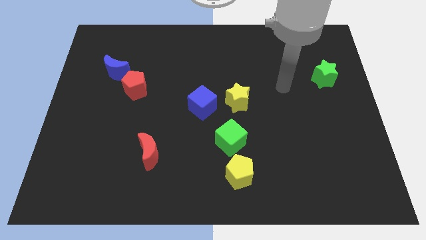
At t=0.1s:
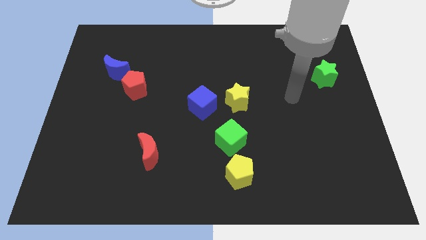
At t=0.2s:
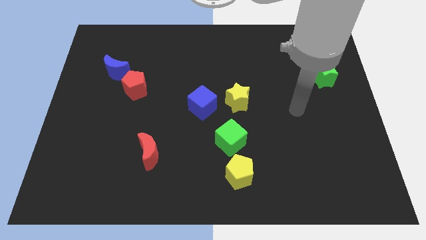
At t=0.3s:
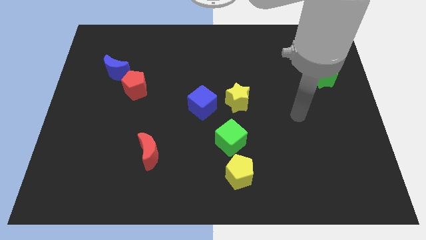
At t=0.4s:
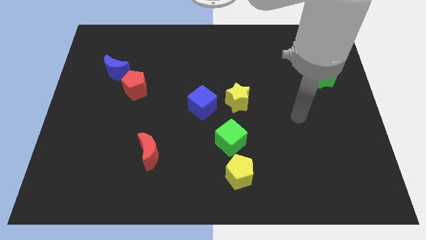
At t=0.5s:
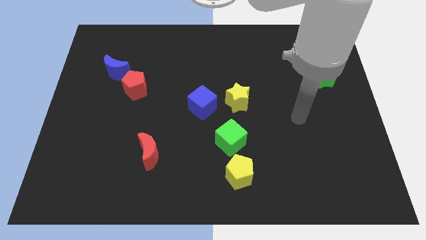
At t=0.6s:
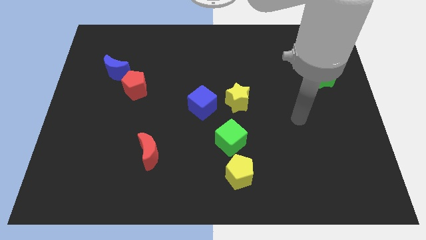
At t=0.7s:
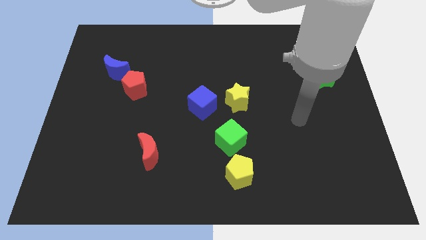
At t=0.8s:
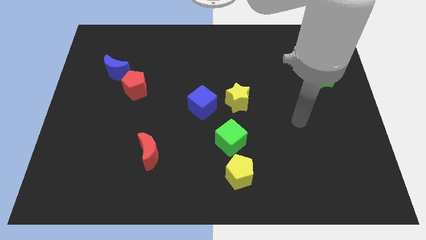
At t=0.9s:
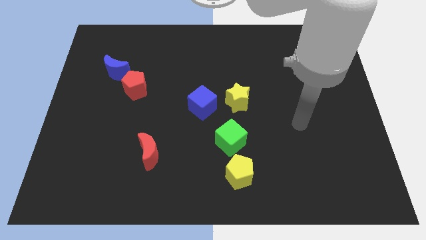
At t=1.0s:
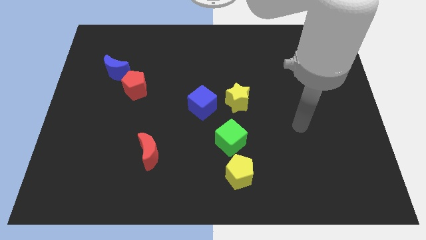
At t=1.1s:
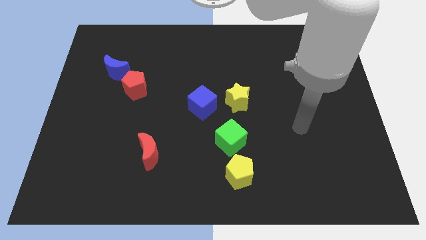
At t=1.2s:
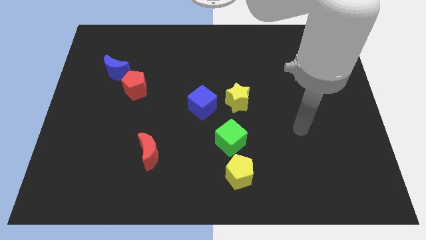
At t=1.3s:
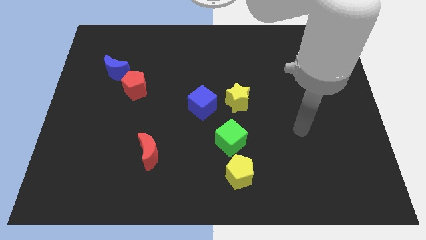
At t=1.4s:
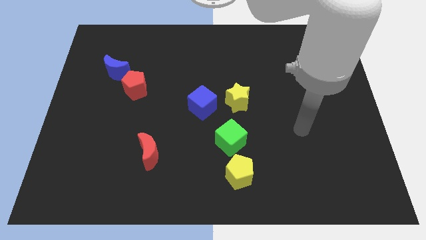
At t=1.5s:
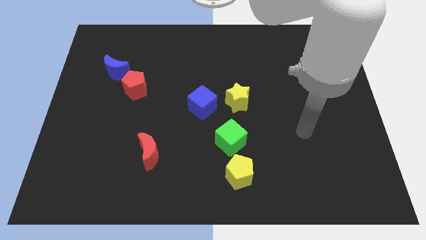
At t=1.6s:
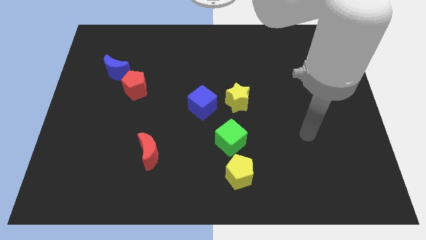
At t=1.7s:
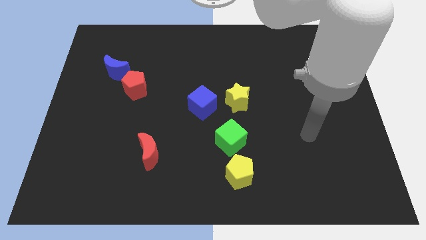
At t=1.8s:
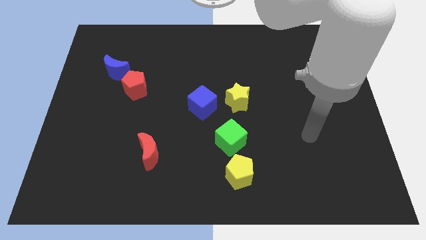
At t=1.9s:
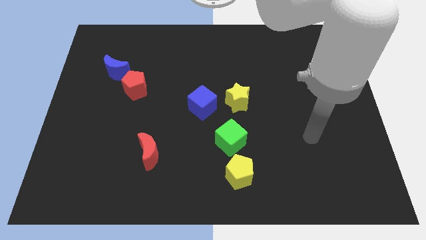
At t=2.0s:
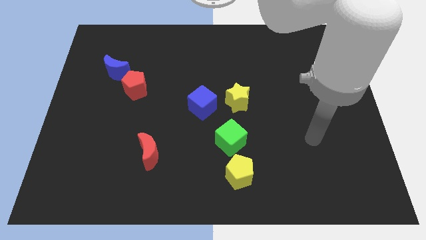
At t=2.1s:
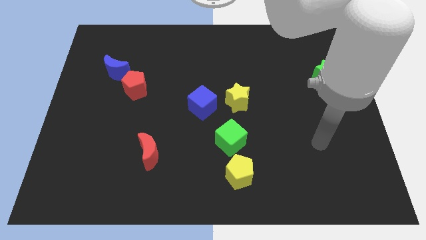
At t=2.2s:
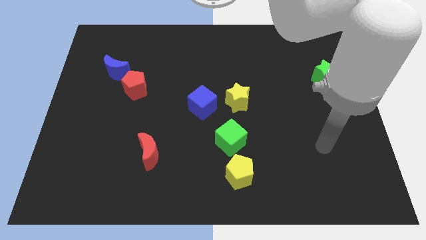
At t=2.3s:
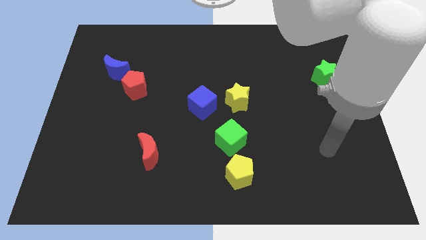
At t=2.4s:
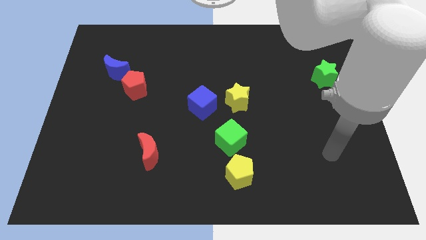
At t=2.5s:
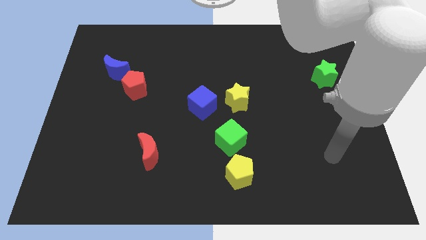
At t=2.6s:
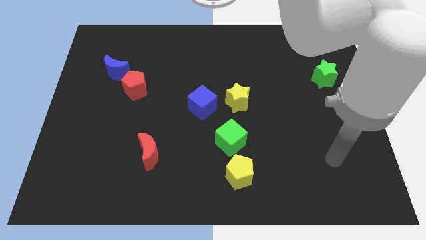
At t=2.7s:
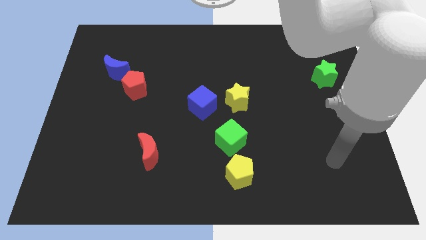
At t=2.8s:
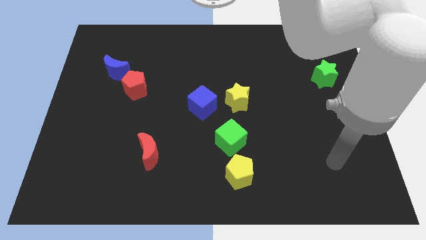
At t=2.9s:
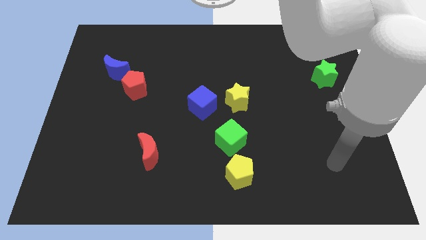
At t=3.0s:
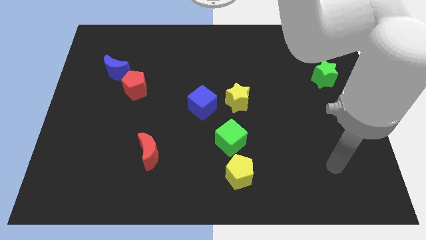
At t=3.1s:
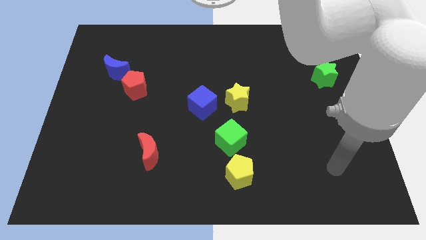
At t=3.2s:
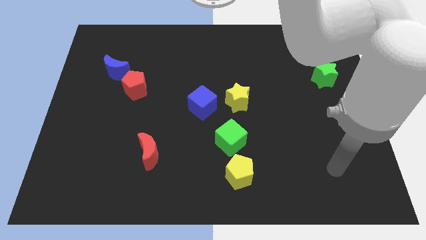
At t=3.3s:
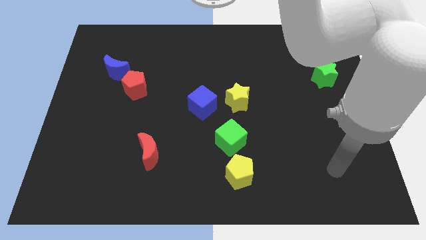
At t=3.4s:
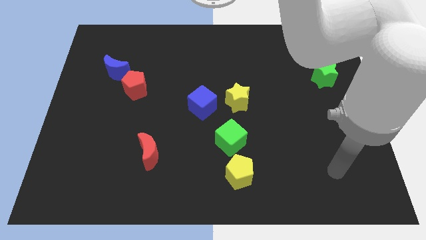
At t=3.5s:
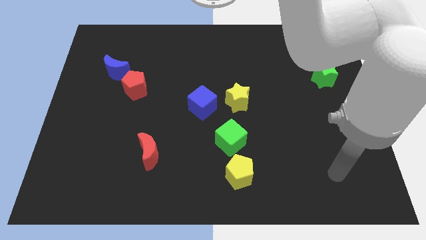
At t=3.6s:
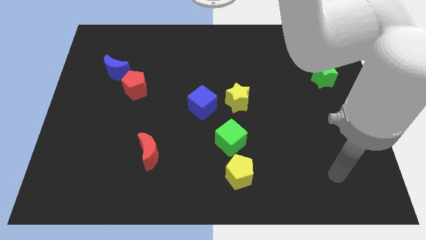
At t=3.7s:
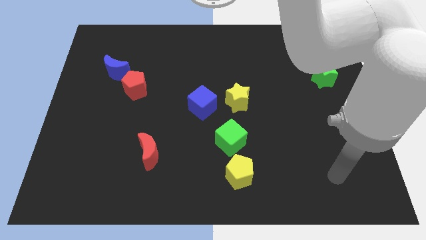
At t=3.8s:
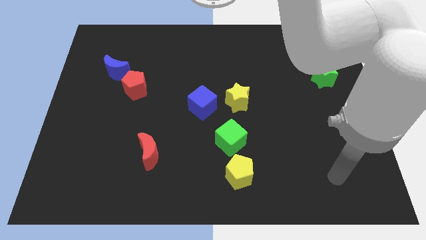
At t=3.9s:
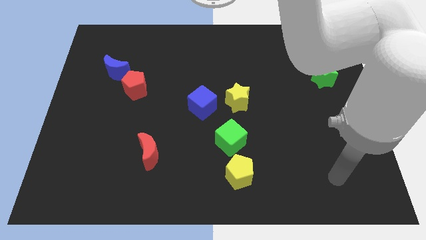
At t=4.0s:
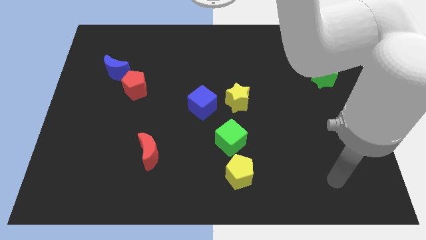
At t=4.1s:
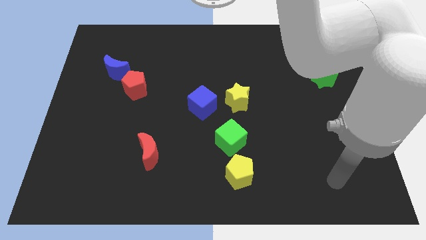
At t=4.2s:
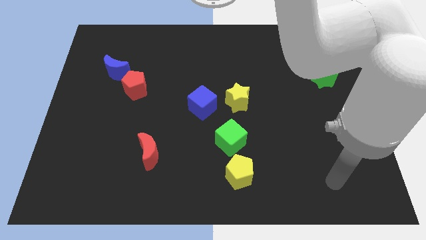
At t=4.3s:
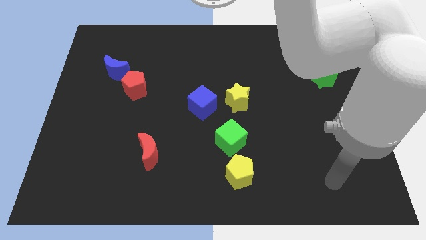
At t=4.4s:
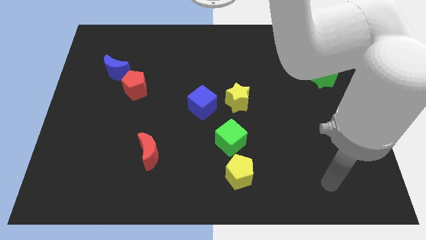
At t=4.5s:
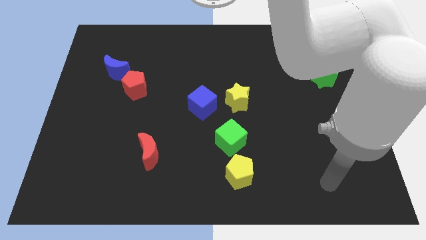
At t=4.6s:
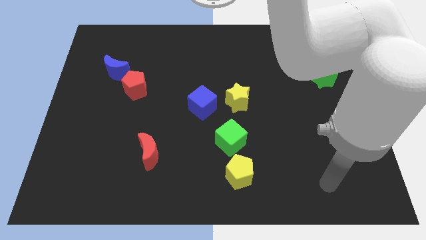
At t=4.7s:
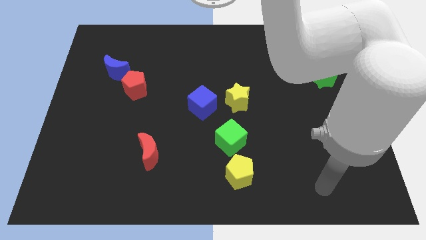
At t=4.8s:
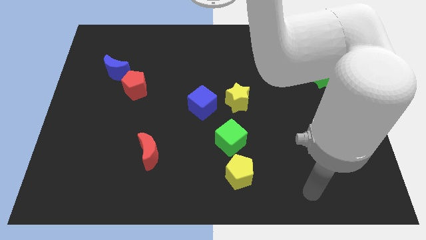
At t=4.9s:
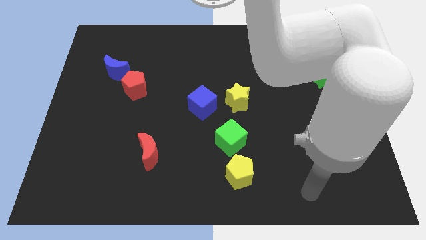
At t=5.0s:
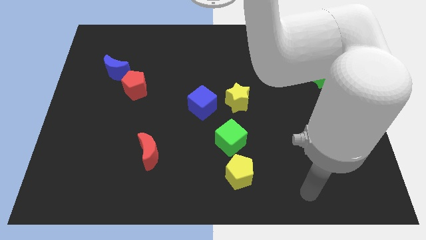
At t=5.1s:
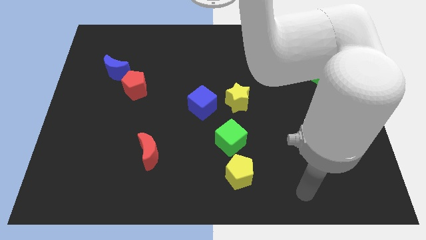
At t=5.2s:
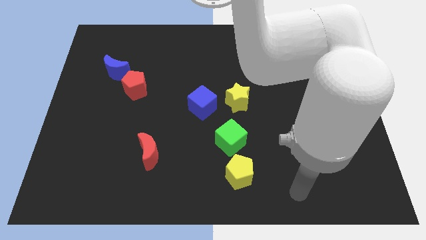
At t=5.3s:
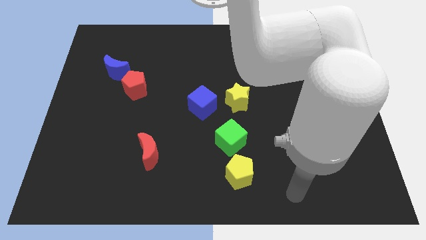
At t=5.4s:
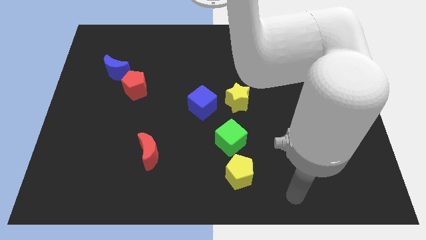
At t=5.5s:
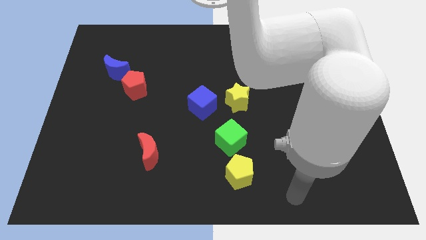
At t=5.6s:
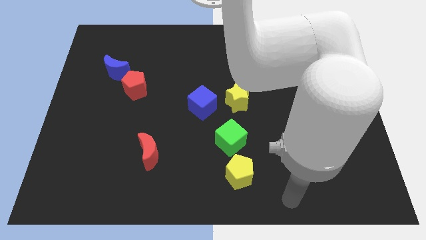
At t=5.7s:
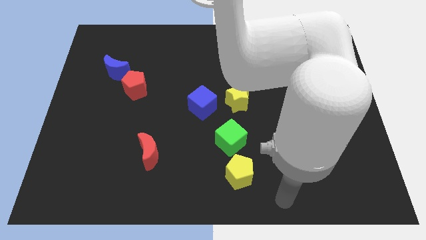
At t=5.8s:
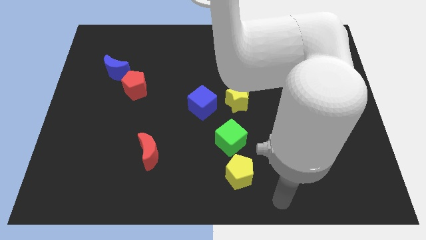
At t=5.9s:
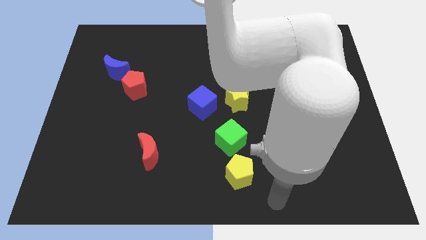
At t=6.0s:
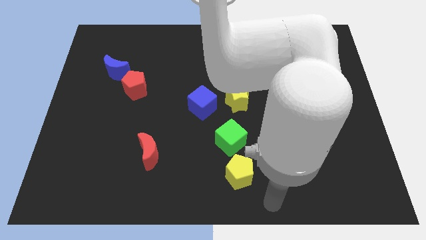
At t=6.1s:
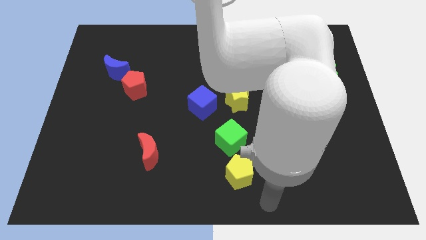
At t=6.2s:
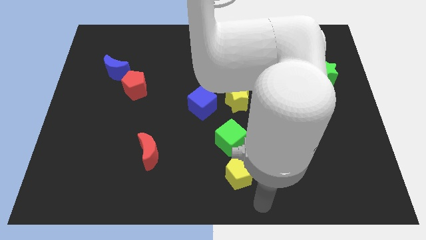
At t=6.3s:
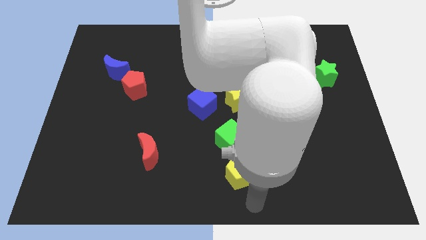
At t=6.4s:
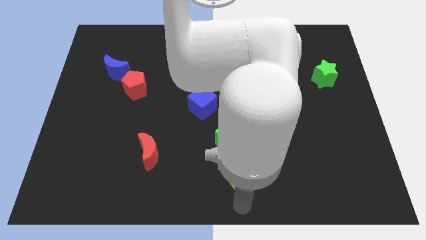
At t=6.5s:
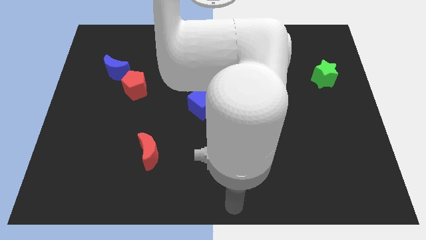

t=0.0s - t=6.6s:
move the arm to the bottom of the yellow pentagon

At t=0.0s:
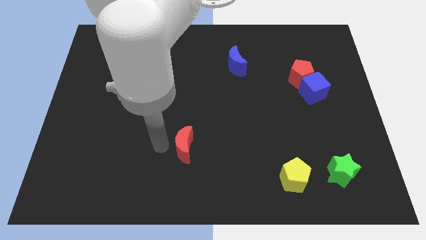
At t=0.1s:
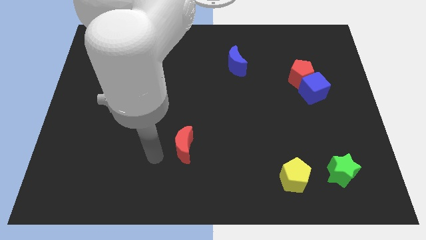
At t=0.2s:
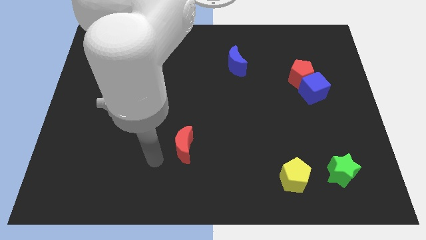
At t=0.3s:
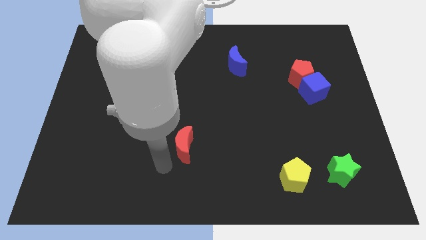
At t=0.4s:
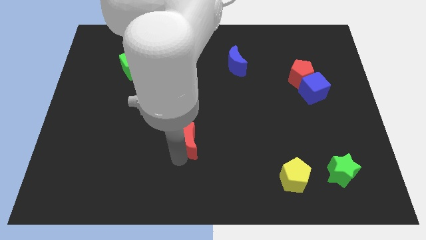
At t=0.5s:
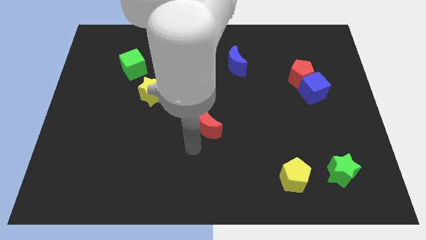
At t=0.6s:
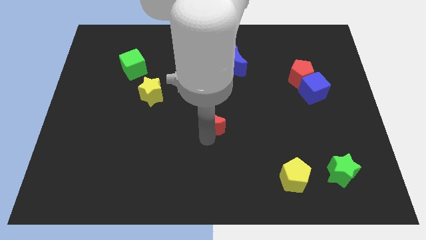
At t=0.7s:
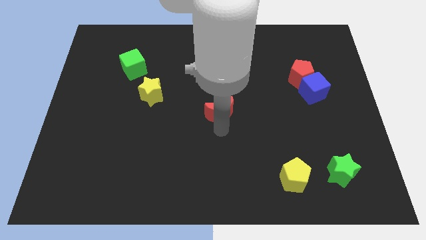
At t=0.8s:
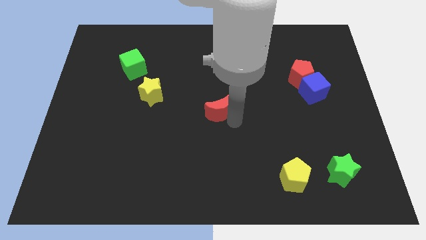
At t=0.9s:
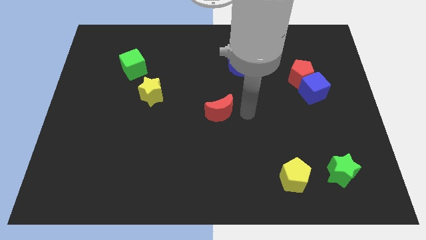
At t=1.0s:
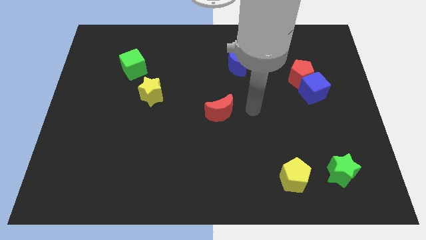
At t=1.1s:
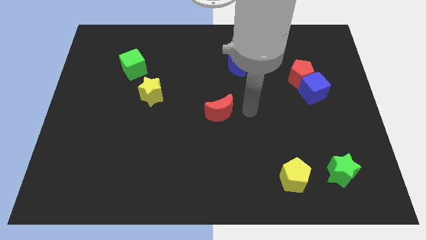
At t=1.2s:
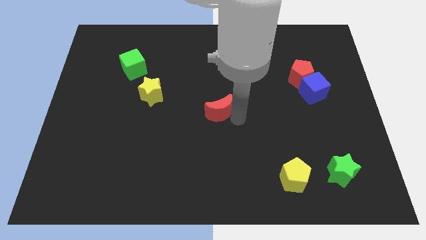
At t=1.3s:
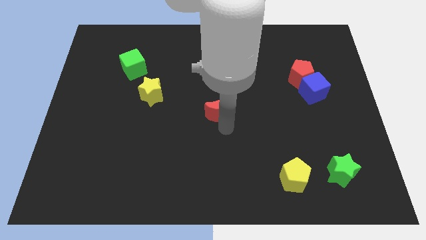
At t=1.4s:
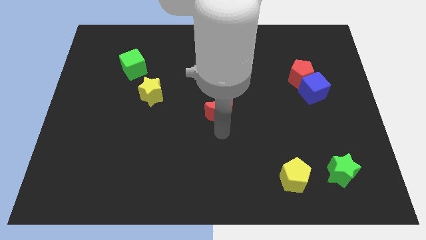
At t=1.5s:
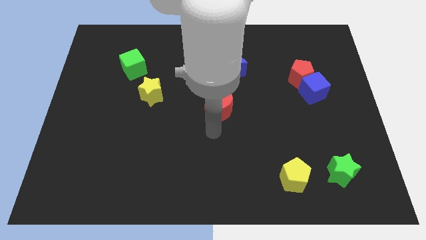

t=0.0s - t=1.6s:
move the red pentagon to the center of the board

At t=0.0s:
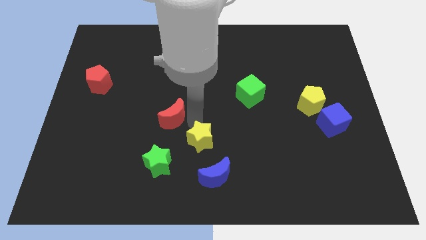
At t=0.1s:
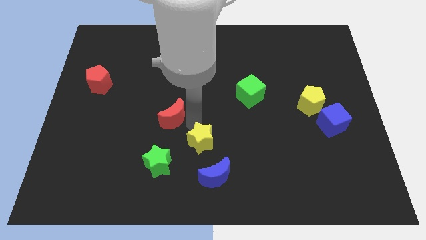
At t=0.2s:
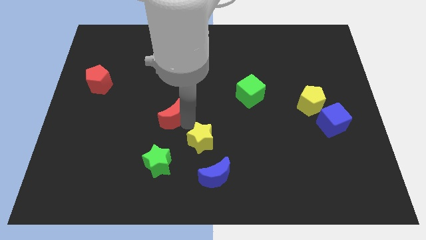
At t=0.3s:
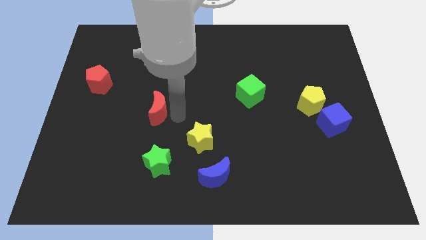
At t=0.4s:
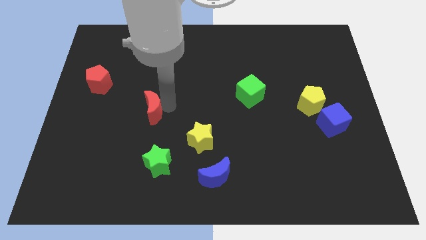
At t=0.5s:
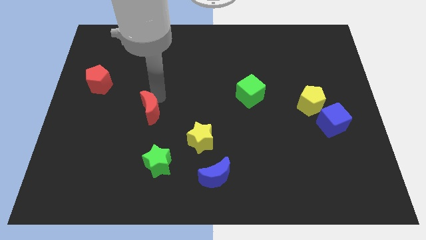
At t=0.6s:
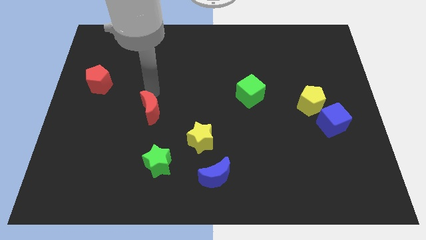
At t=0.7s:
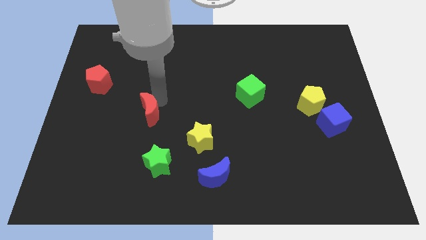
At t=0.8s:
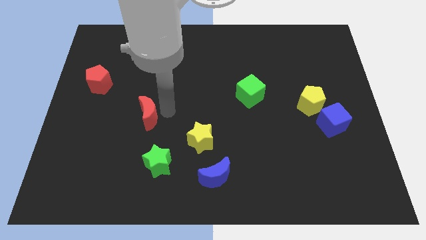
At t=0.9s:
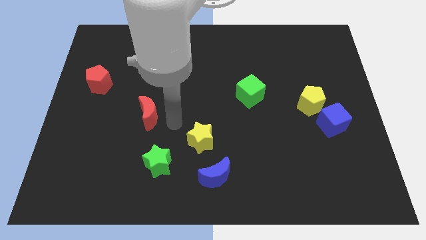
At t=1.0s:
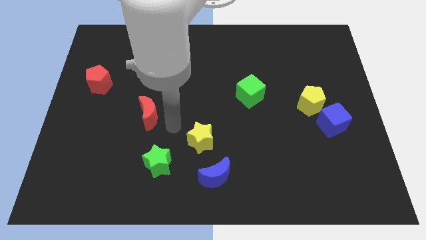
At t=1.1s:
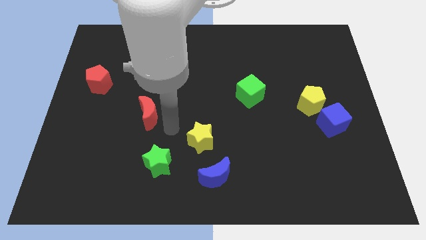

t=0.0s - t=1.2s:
put the red crescent above the green star
